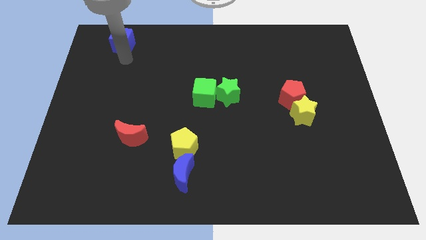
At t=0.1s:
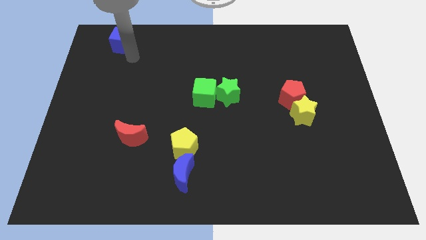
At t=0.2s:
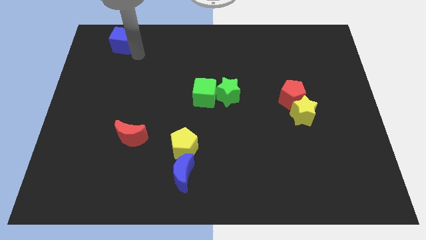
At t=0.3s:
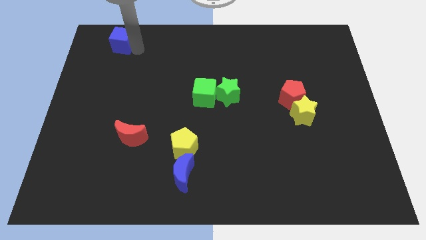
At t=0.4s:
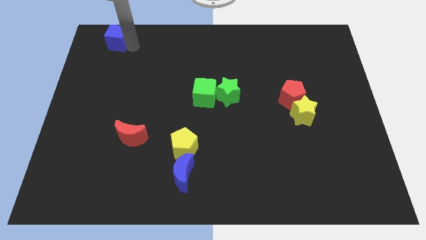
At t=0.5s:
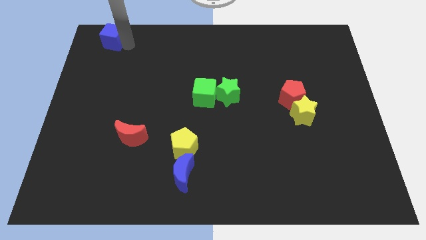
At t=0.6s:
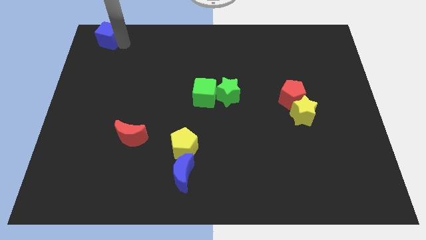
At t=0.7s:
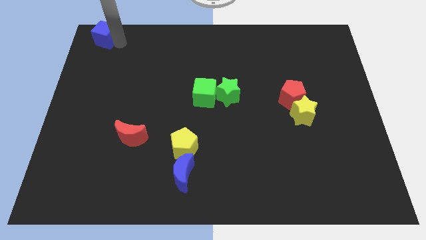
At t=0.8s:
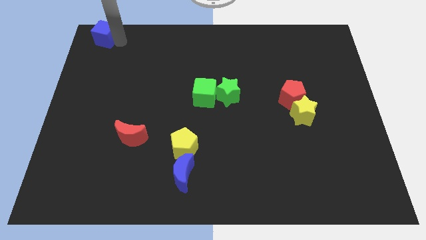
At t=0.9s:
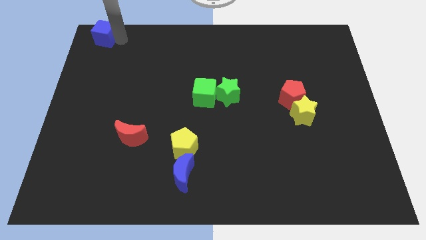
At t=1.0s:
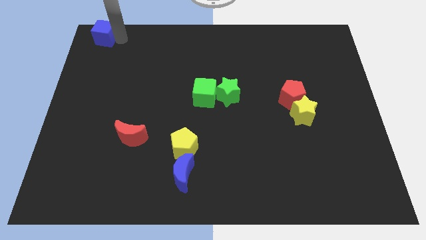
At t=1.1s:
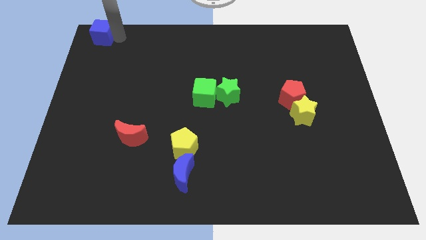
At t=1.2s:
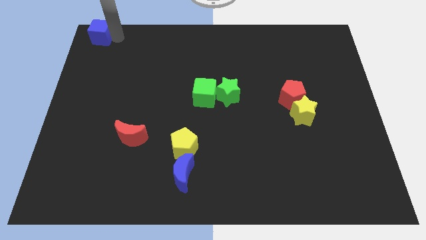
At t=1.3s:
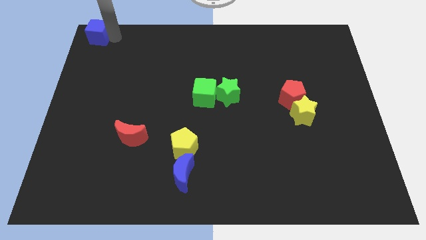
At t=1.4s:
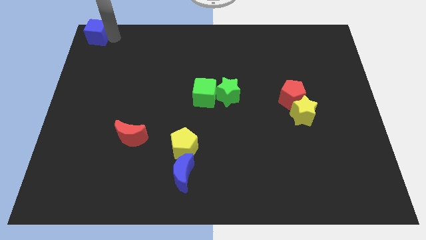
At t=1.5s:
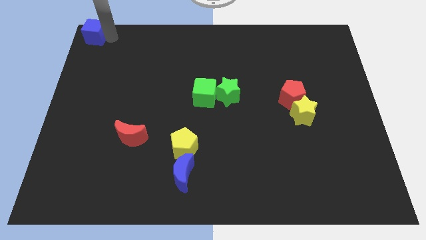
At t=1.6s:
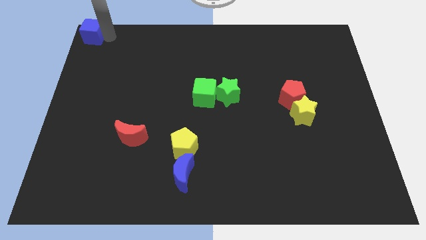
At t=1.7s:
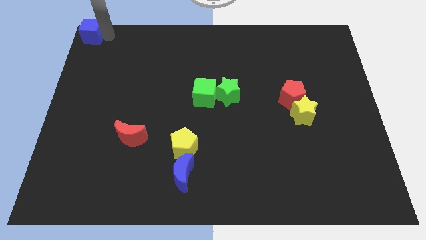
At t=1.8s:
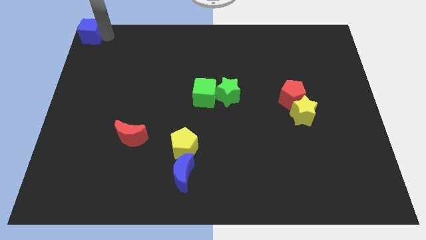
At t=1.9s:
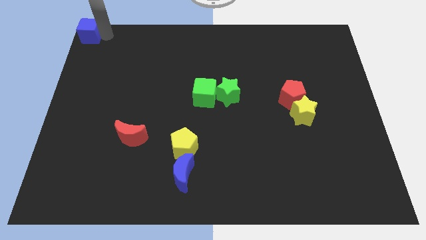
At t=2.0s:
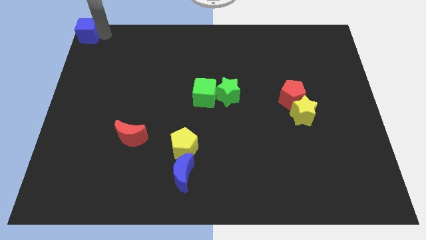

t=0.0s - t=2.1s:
place blue cube at the top left

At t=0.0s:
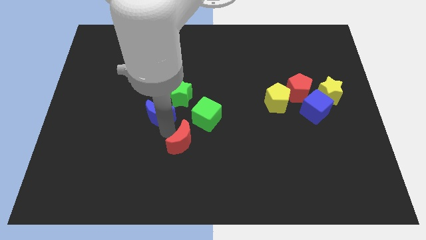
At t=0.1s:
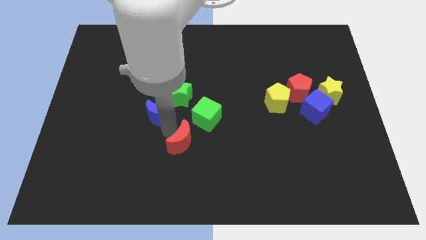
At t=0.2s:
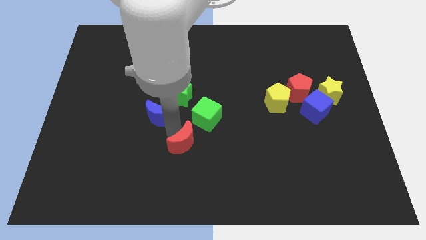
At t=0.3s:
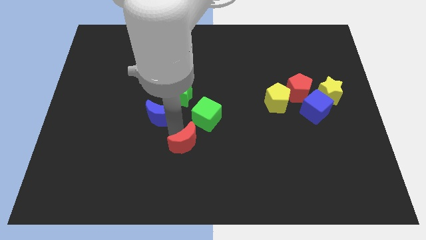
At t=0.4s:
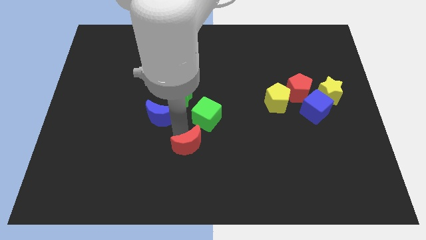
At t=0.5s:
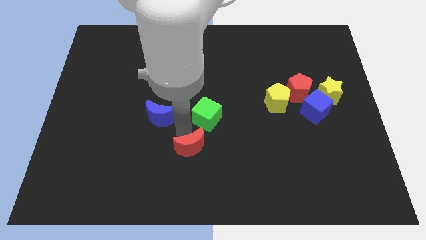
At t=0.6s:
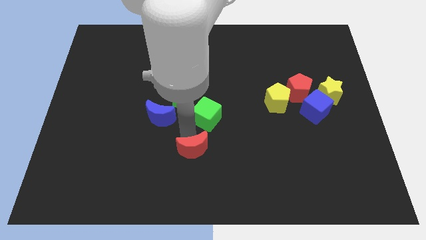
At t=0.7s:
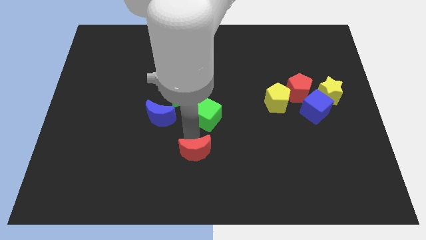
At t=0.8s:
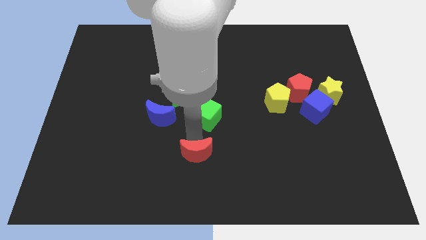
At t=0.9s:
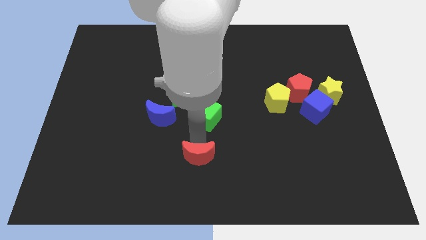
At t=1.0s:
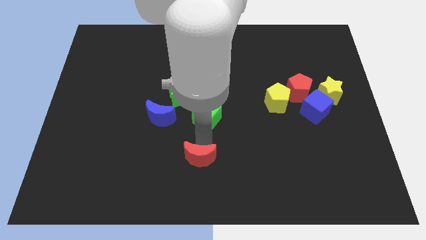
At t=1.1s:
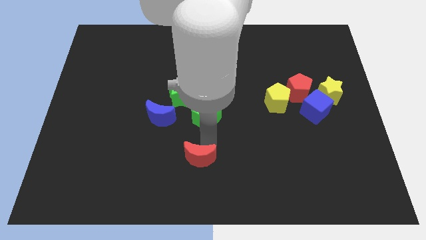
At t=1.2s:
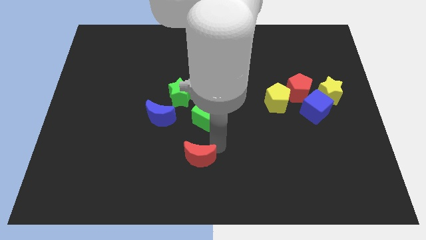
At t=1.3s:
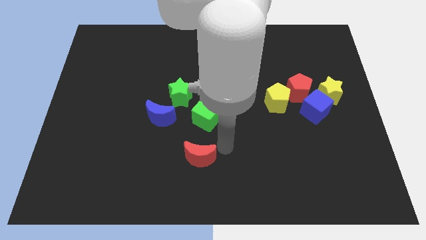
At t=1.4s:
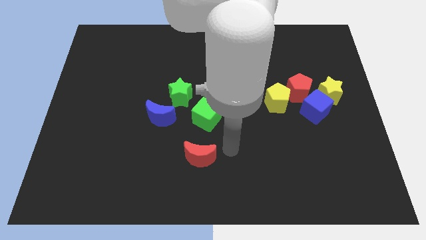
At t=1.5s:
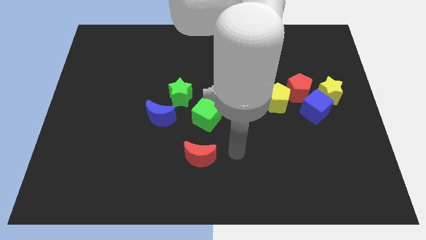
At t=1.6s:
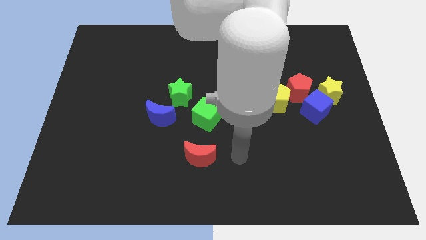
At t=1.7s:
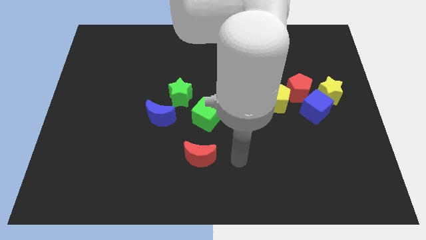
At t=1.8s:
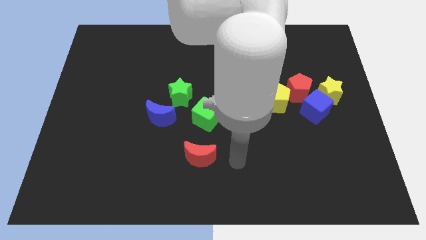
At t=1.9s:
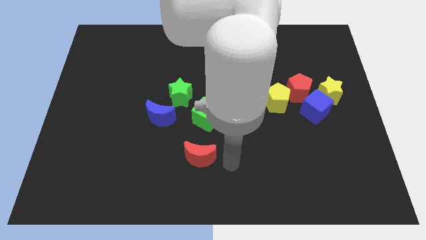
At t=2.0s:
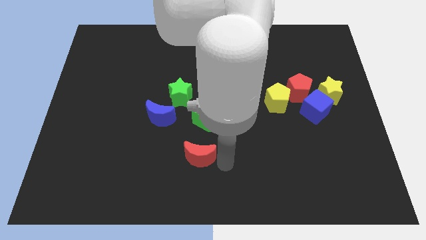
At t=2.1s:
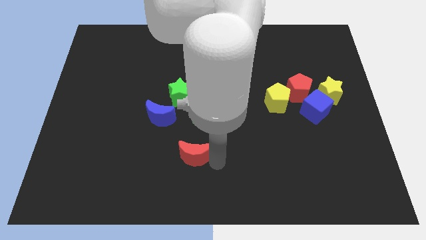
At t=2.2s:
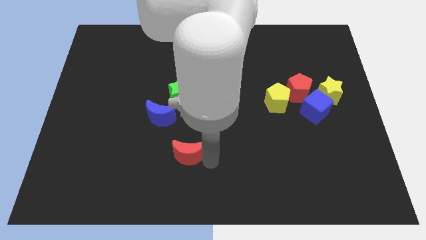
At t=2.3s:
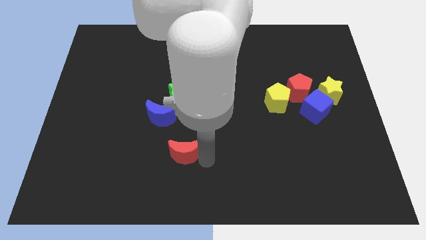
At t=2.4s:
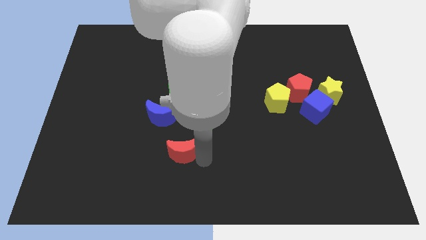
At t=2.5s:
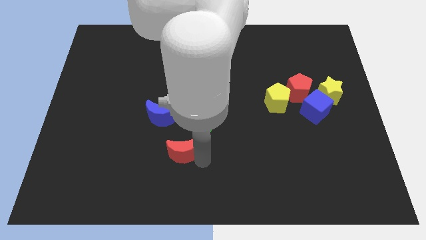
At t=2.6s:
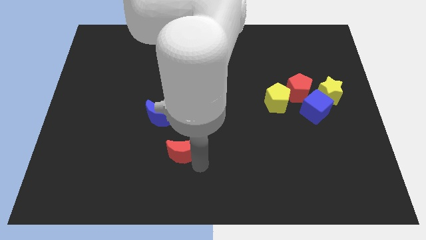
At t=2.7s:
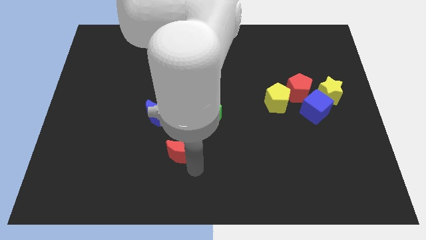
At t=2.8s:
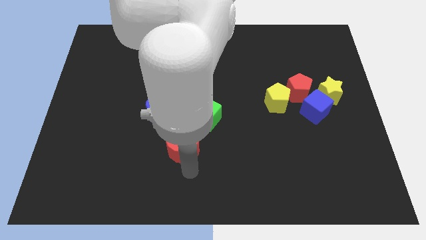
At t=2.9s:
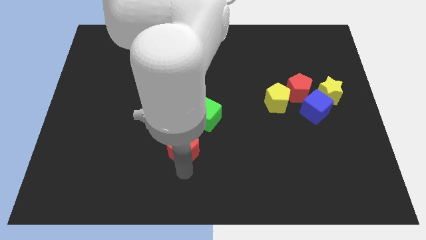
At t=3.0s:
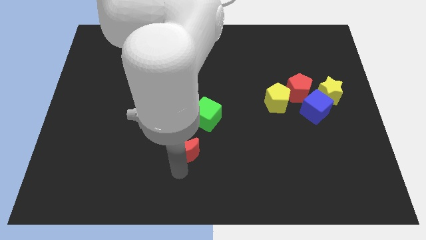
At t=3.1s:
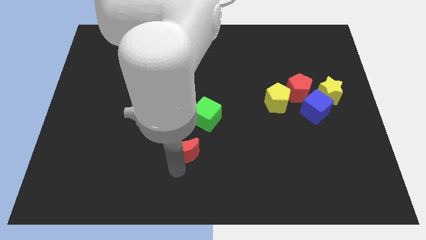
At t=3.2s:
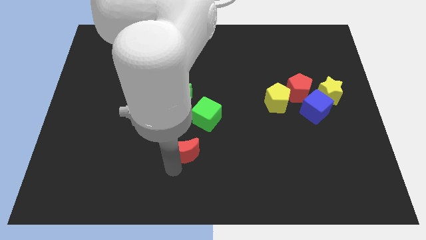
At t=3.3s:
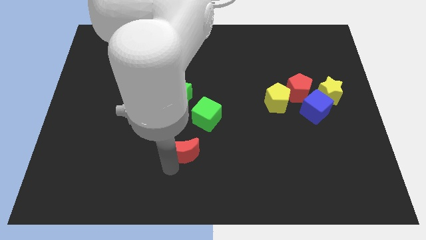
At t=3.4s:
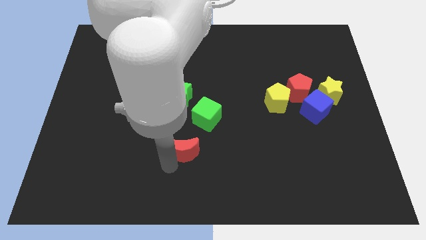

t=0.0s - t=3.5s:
slightly adjust the red crescent vertically to the green star

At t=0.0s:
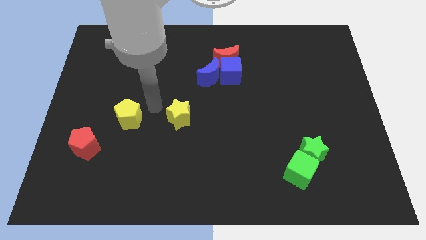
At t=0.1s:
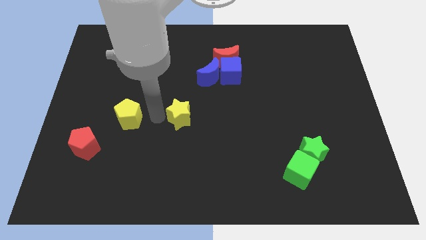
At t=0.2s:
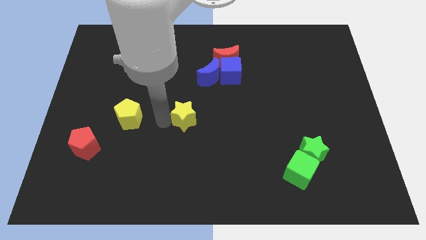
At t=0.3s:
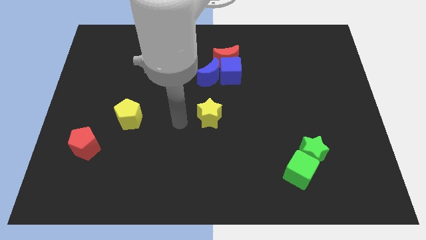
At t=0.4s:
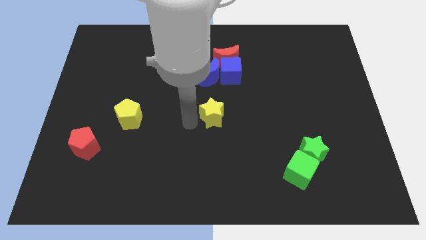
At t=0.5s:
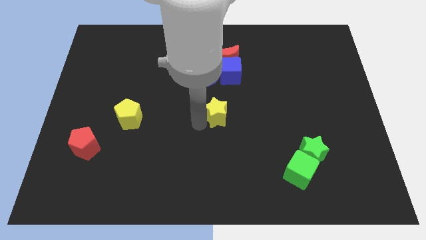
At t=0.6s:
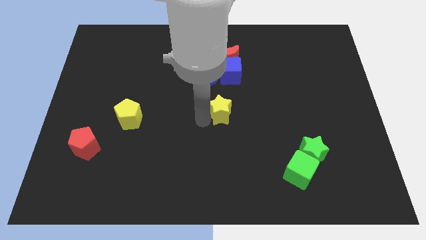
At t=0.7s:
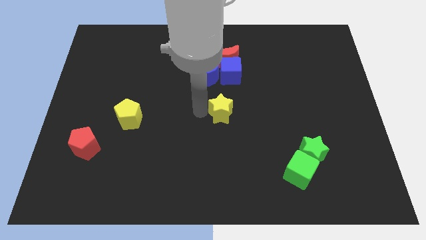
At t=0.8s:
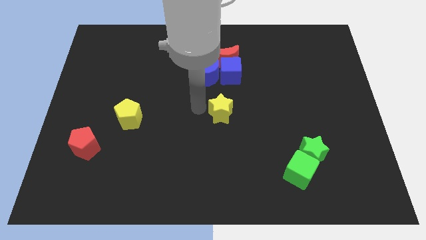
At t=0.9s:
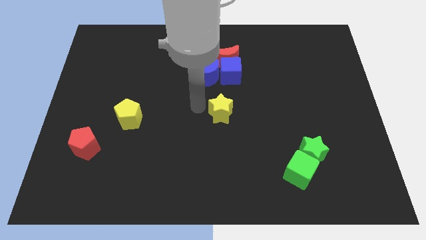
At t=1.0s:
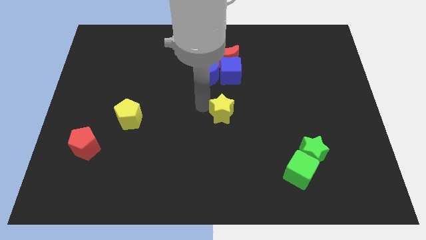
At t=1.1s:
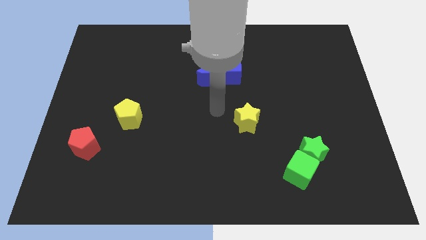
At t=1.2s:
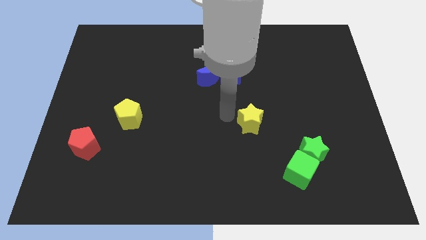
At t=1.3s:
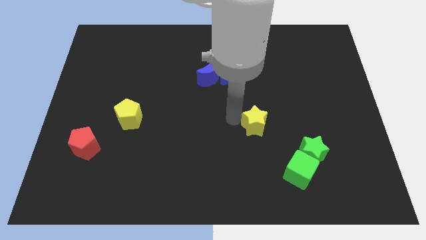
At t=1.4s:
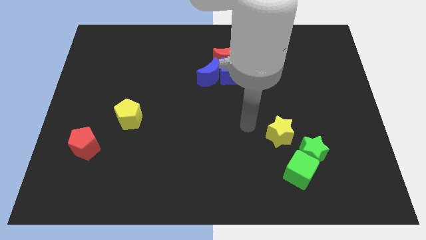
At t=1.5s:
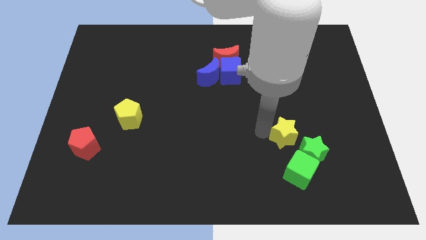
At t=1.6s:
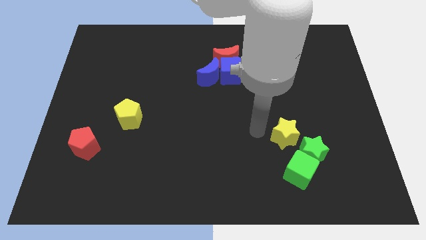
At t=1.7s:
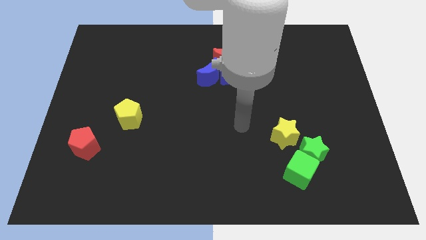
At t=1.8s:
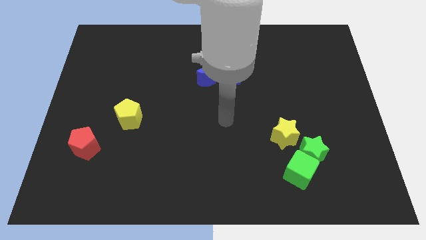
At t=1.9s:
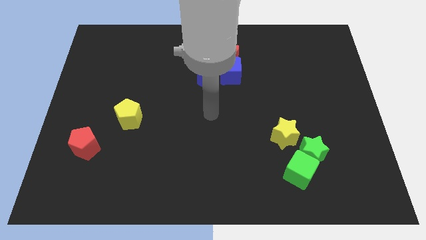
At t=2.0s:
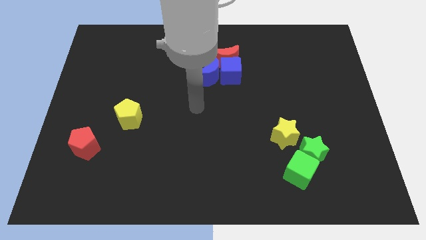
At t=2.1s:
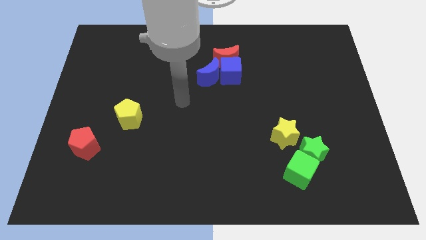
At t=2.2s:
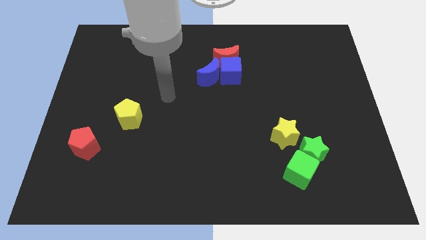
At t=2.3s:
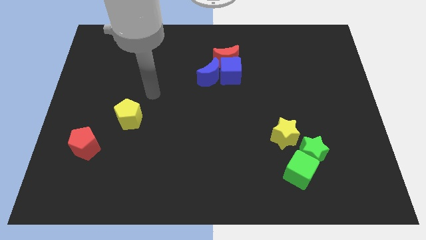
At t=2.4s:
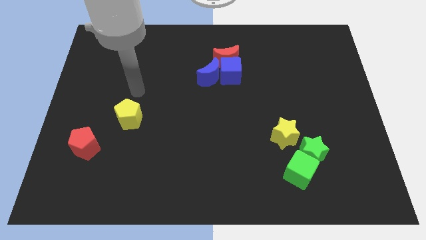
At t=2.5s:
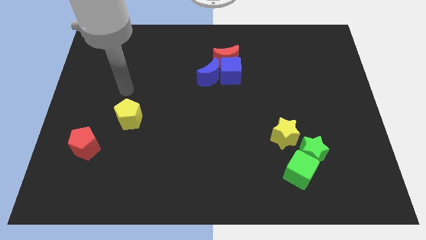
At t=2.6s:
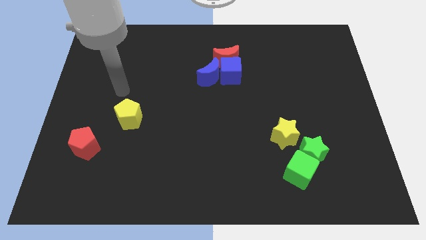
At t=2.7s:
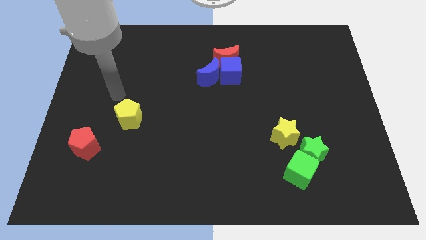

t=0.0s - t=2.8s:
place the yellow star beside the green star

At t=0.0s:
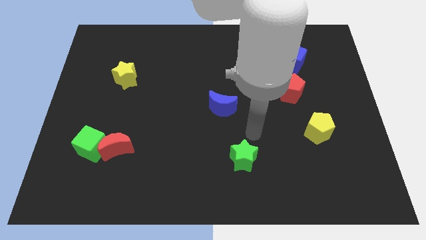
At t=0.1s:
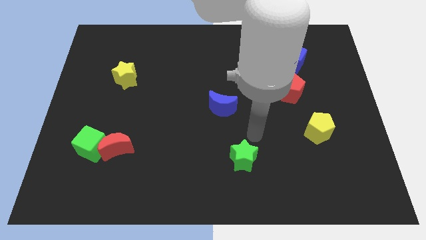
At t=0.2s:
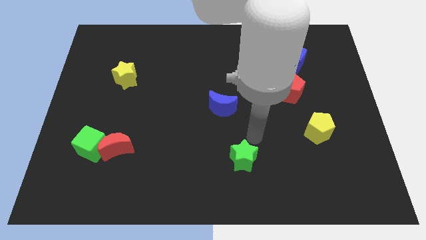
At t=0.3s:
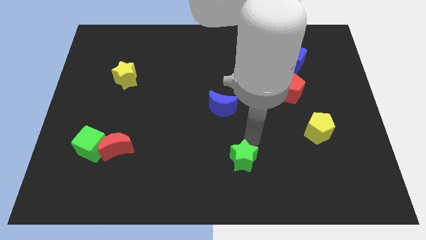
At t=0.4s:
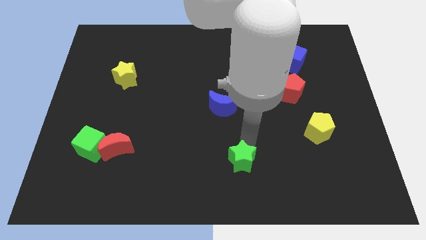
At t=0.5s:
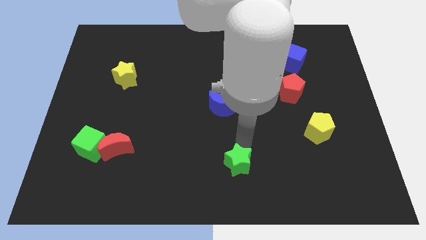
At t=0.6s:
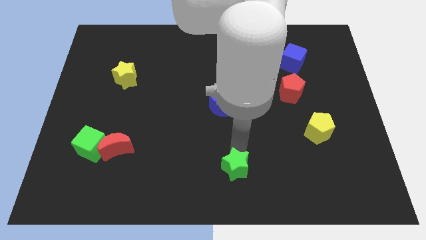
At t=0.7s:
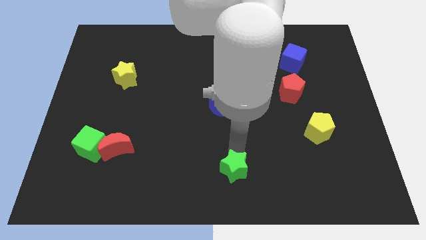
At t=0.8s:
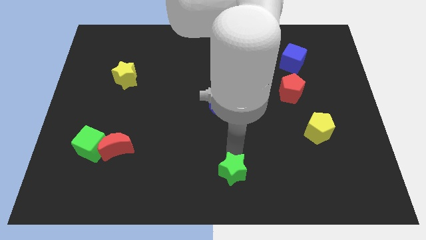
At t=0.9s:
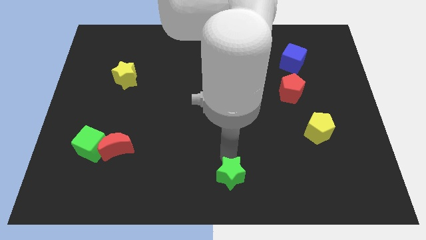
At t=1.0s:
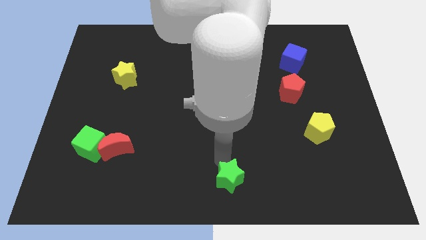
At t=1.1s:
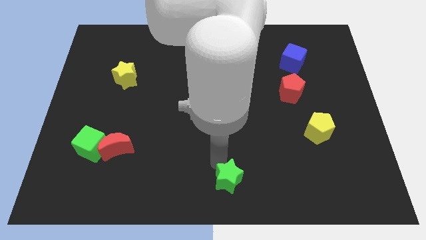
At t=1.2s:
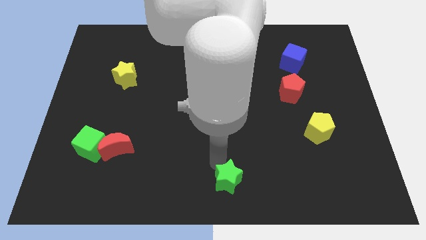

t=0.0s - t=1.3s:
push the green star towards the bottom side of the board
